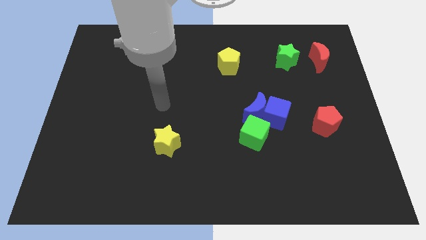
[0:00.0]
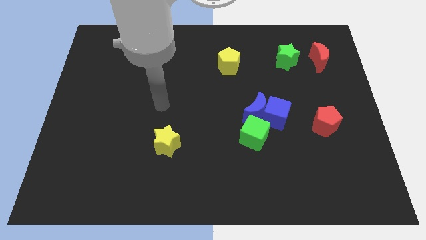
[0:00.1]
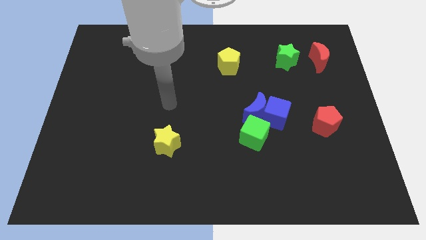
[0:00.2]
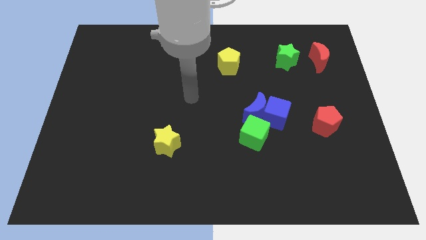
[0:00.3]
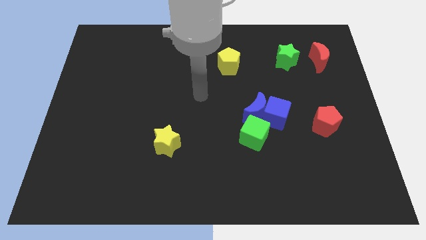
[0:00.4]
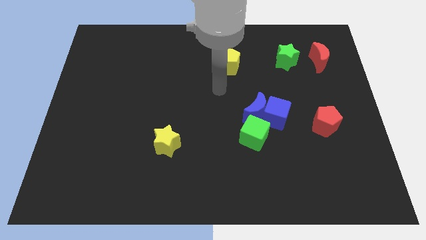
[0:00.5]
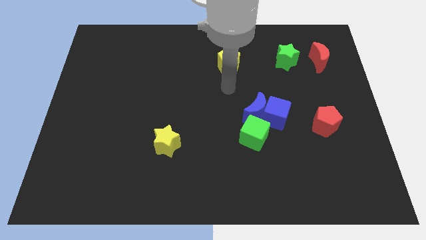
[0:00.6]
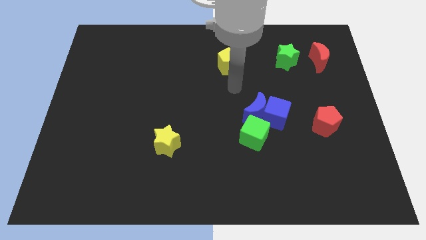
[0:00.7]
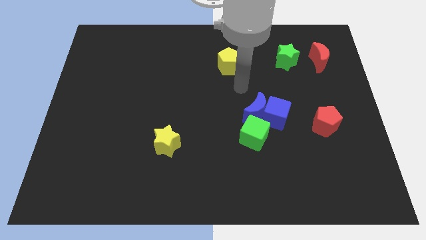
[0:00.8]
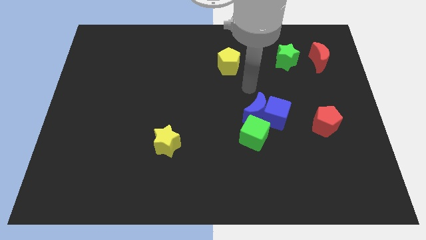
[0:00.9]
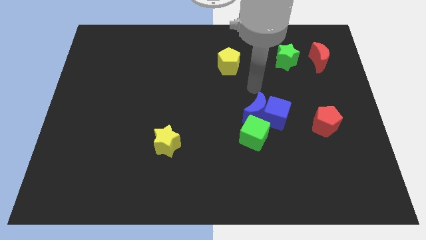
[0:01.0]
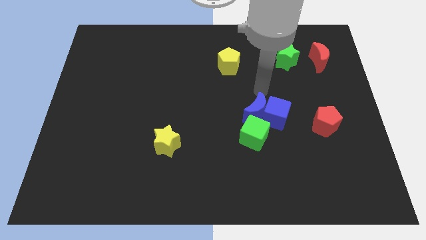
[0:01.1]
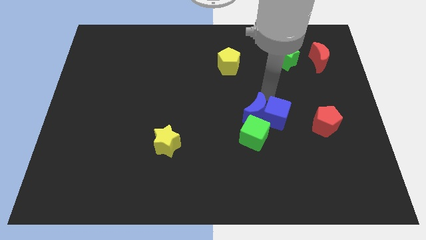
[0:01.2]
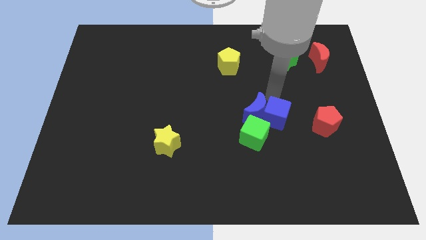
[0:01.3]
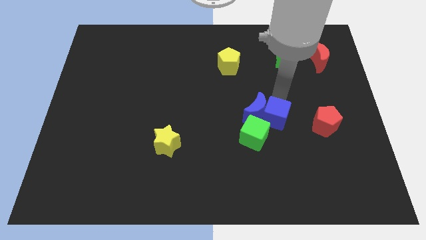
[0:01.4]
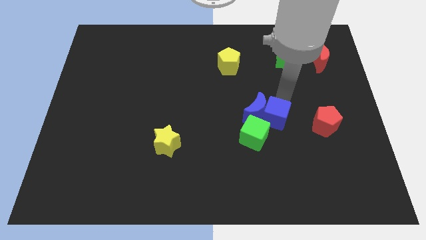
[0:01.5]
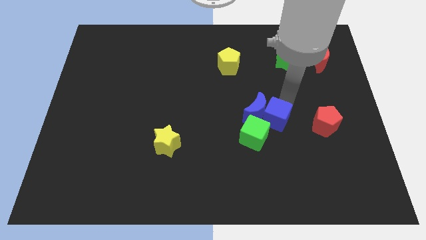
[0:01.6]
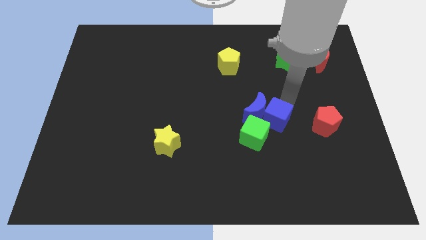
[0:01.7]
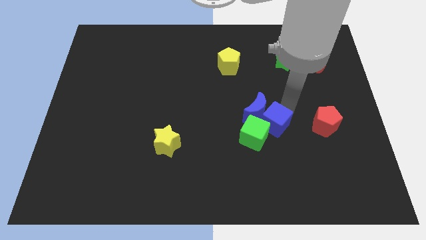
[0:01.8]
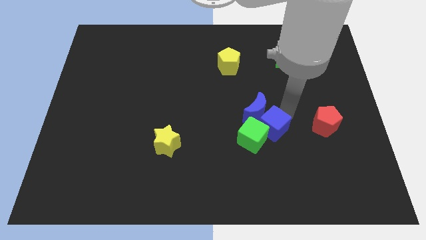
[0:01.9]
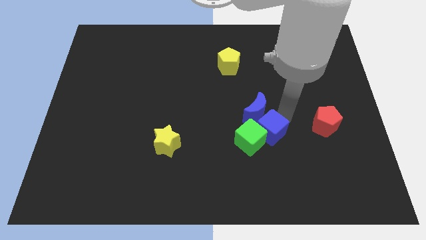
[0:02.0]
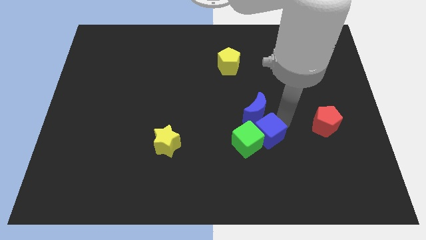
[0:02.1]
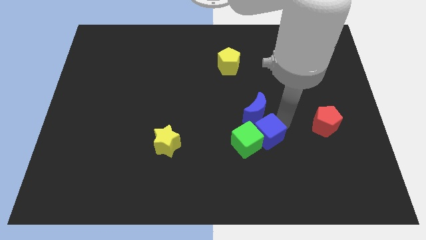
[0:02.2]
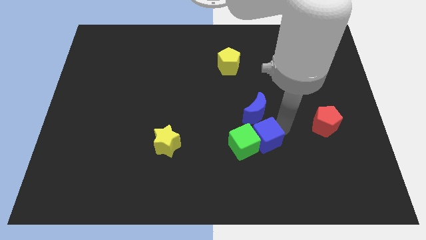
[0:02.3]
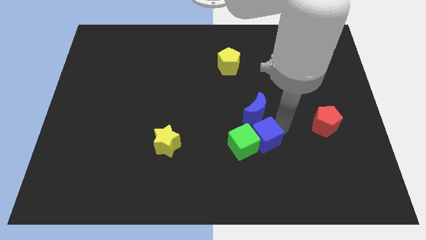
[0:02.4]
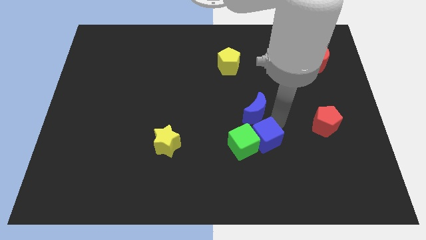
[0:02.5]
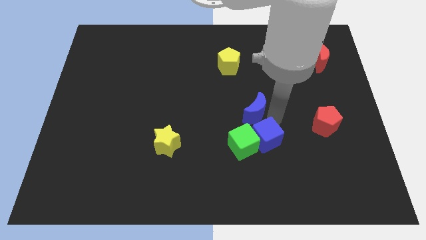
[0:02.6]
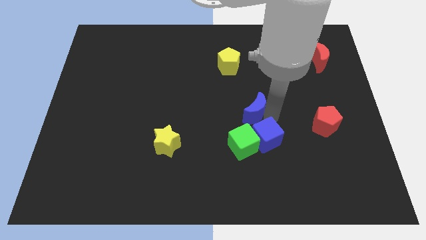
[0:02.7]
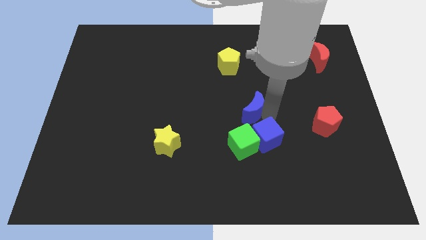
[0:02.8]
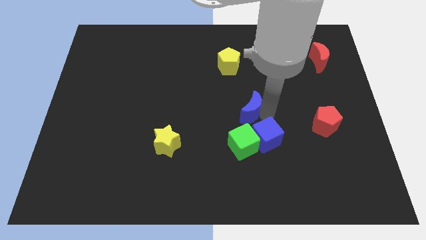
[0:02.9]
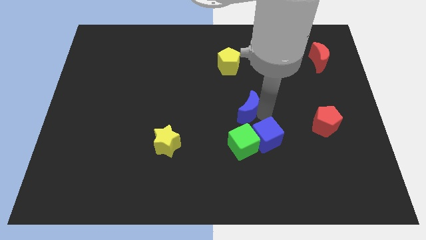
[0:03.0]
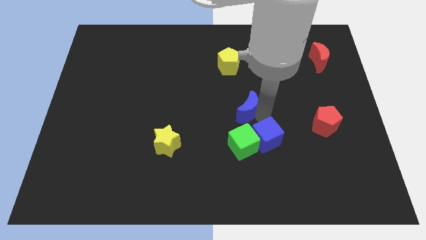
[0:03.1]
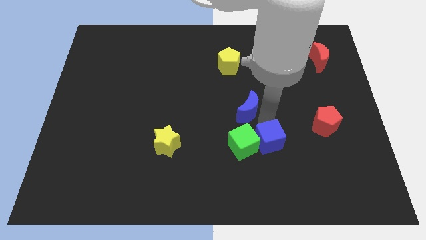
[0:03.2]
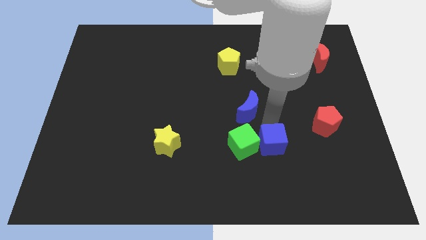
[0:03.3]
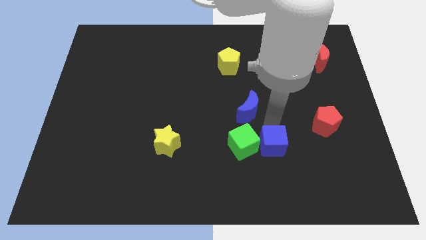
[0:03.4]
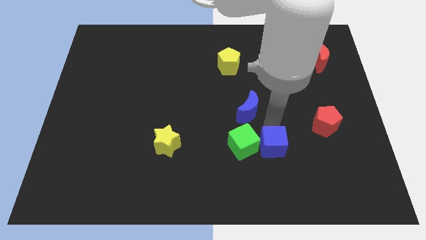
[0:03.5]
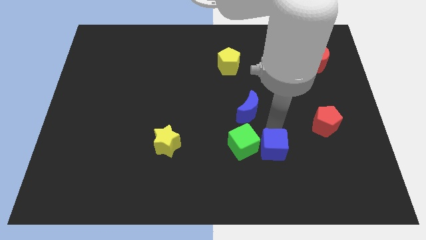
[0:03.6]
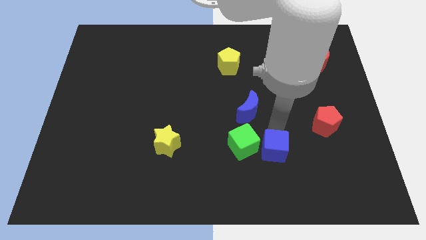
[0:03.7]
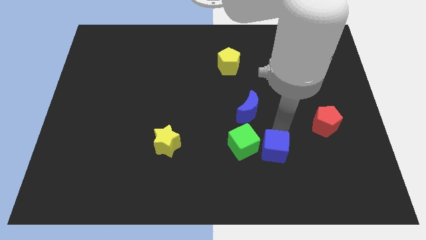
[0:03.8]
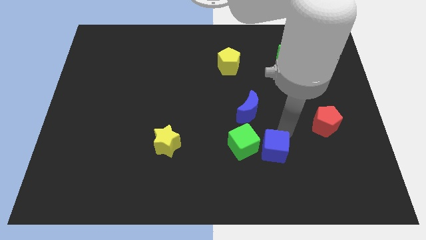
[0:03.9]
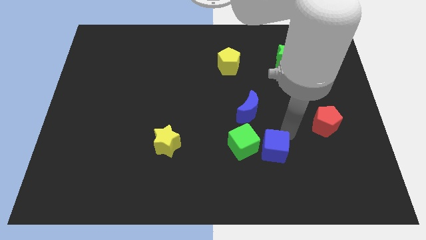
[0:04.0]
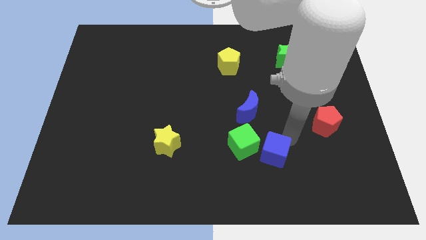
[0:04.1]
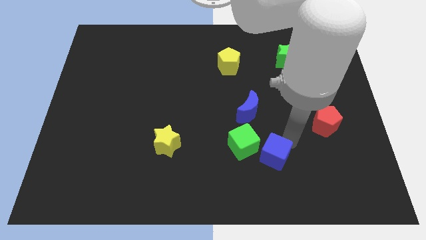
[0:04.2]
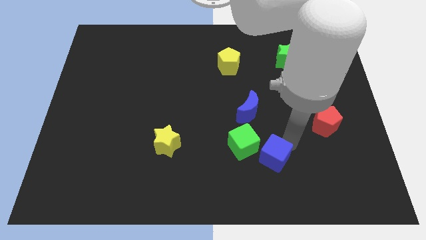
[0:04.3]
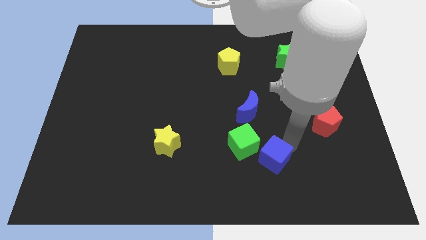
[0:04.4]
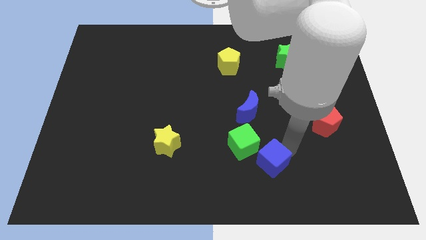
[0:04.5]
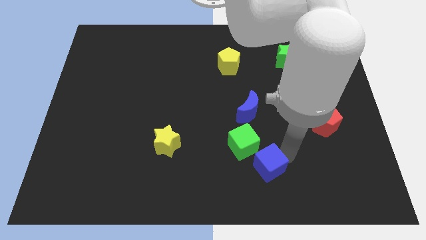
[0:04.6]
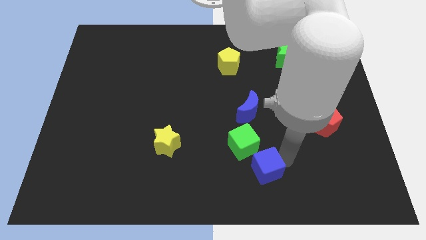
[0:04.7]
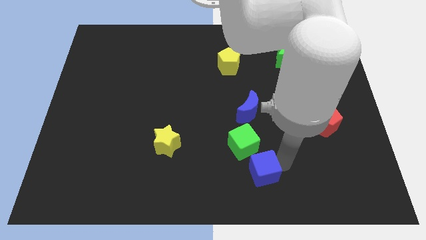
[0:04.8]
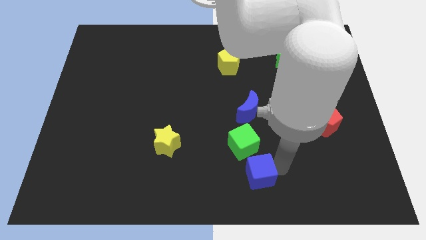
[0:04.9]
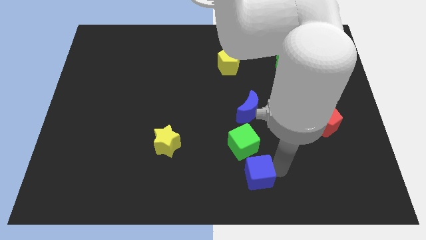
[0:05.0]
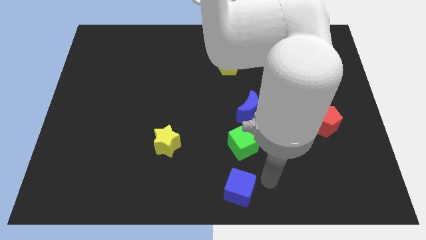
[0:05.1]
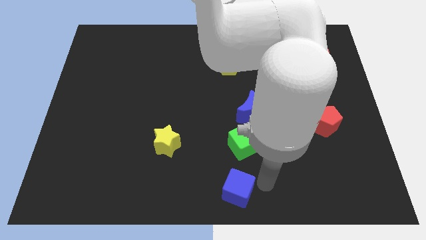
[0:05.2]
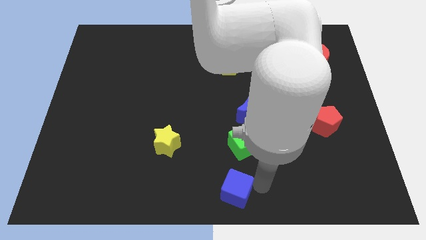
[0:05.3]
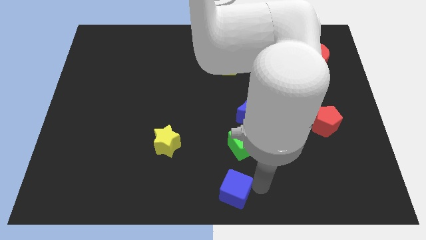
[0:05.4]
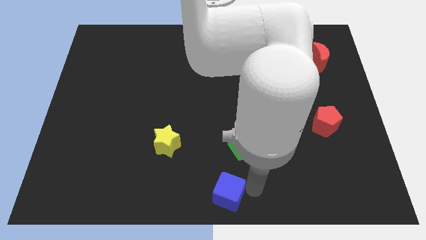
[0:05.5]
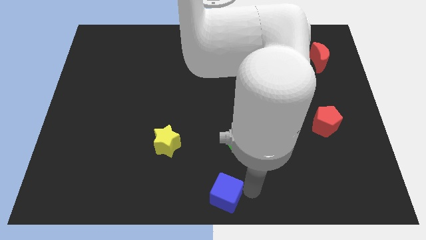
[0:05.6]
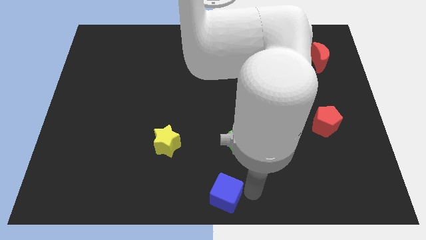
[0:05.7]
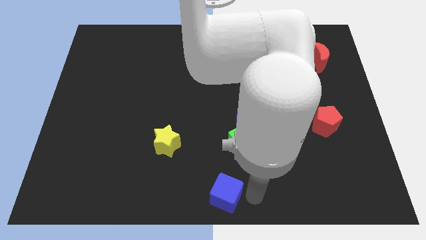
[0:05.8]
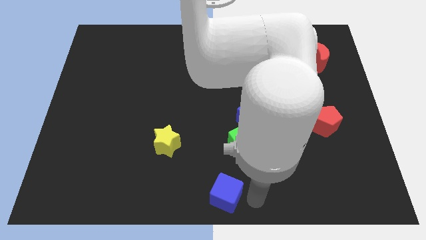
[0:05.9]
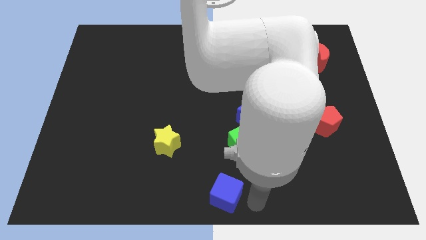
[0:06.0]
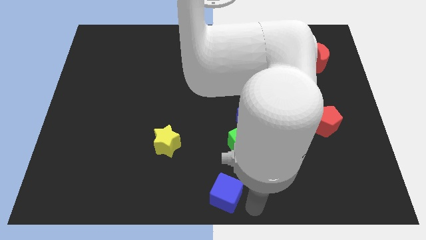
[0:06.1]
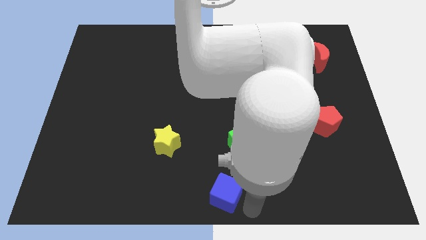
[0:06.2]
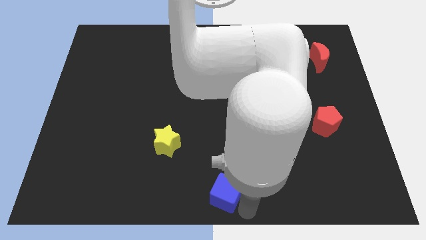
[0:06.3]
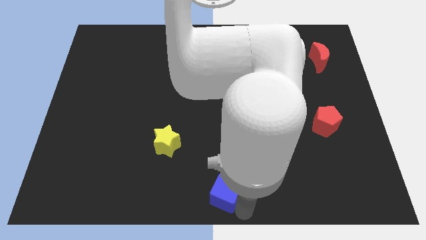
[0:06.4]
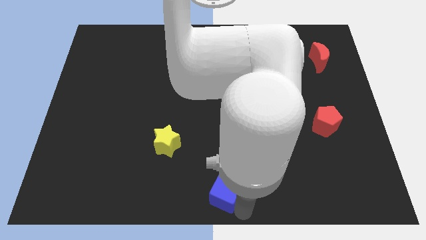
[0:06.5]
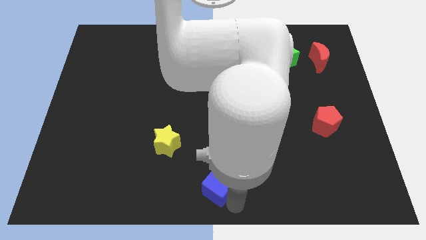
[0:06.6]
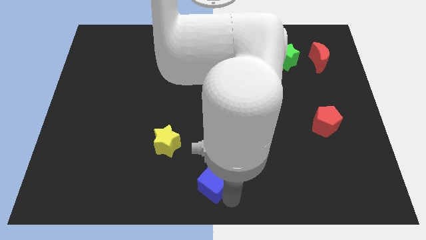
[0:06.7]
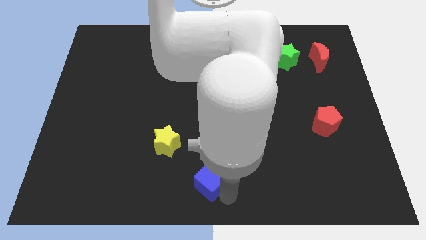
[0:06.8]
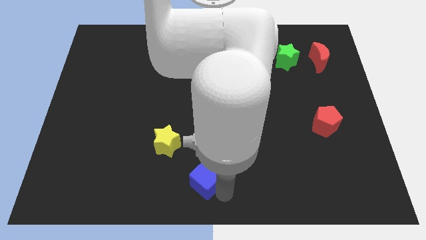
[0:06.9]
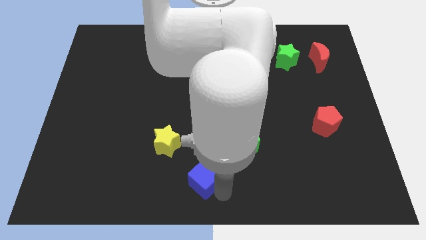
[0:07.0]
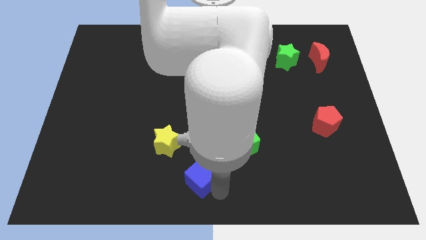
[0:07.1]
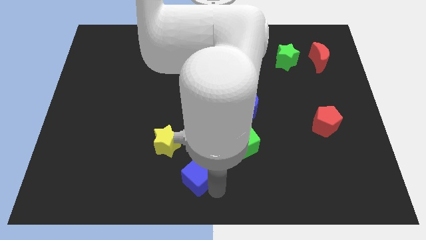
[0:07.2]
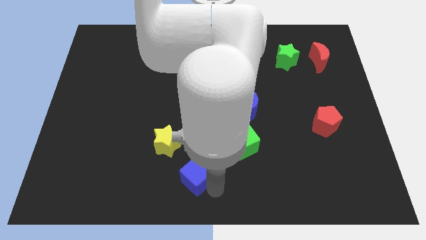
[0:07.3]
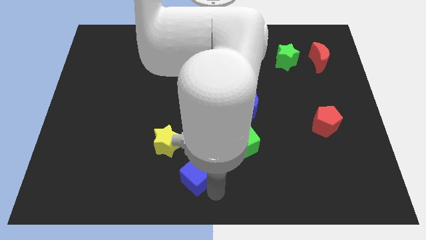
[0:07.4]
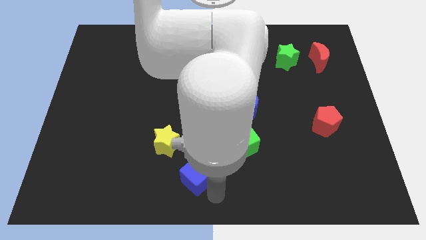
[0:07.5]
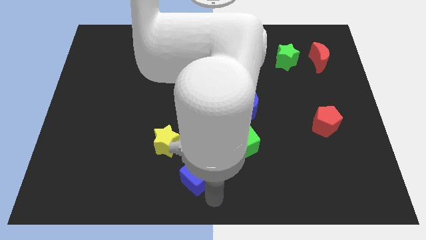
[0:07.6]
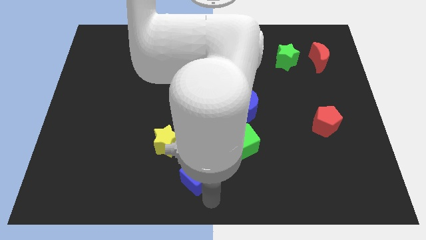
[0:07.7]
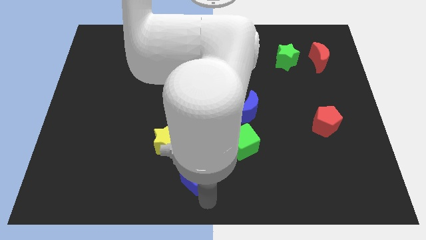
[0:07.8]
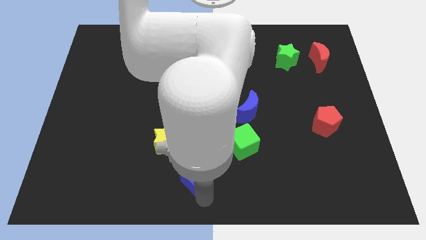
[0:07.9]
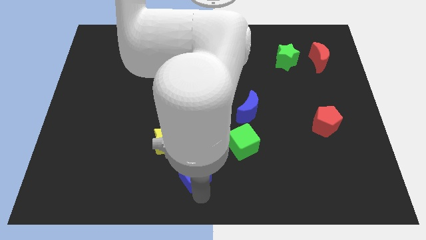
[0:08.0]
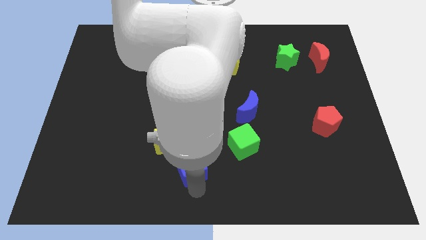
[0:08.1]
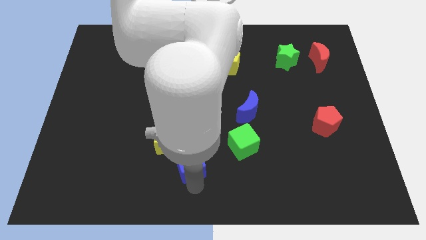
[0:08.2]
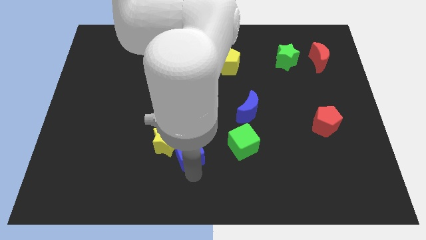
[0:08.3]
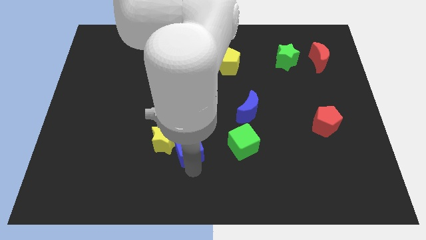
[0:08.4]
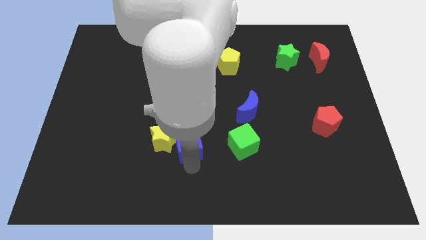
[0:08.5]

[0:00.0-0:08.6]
move the blue cube towards the yellow star
